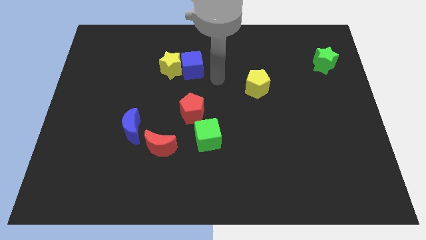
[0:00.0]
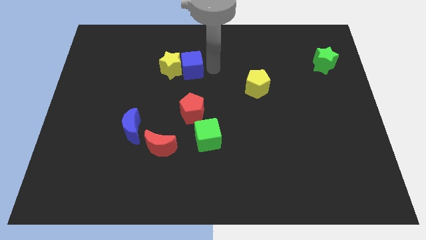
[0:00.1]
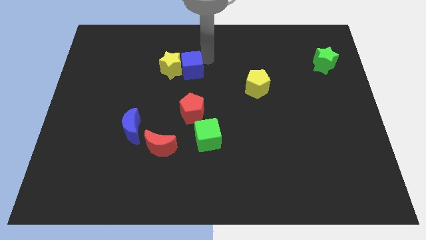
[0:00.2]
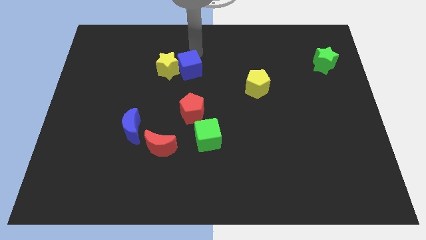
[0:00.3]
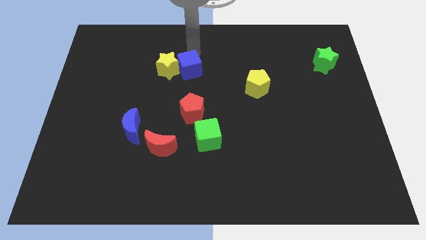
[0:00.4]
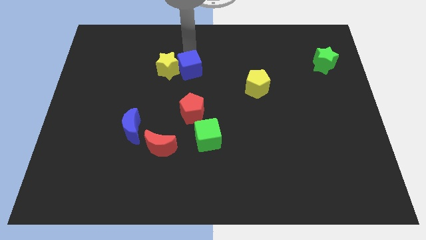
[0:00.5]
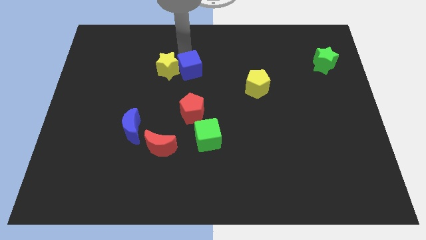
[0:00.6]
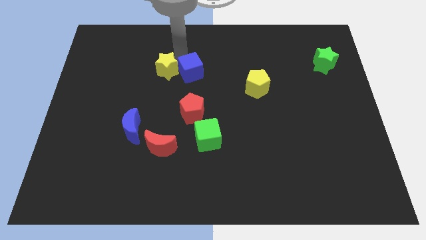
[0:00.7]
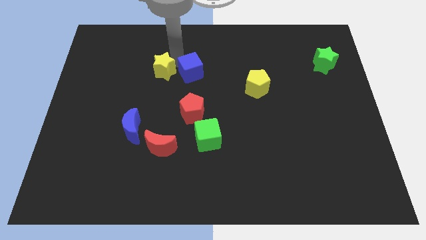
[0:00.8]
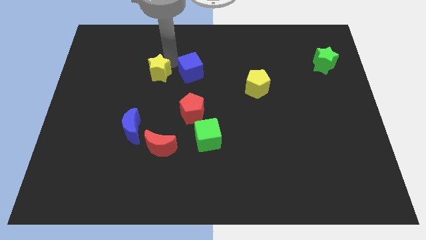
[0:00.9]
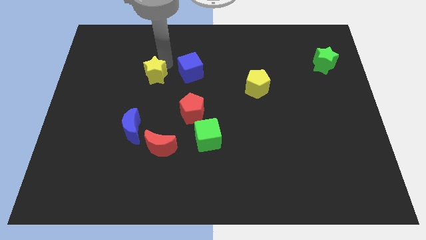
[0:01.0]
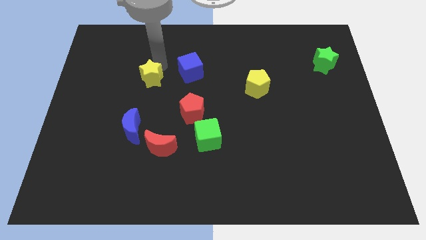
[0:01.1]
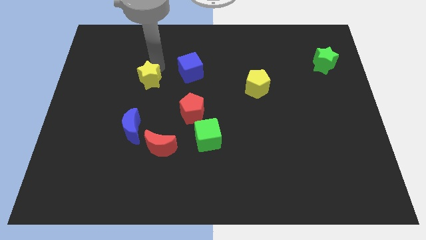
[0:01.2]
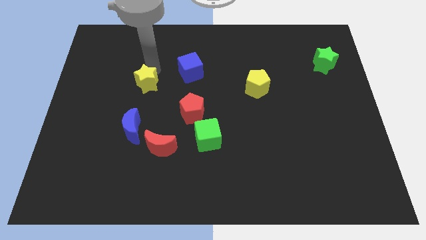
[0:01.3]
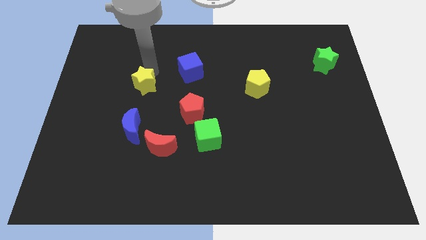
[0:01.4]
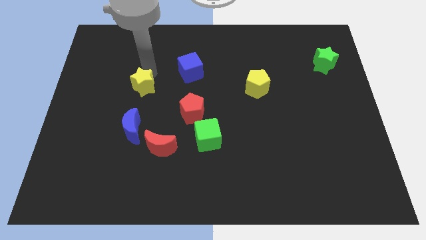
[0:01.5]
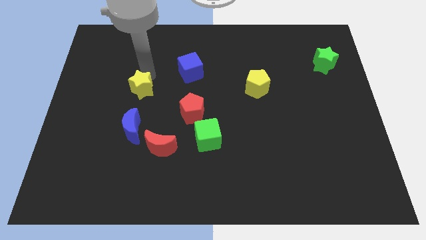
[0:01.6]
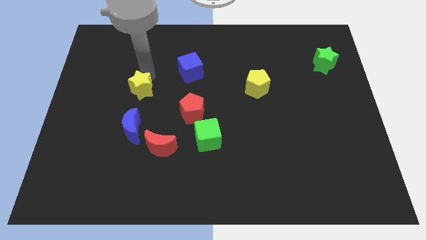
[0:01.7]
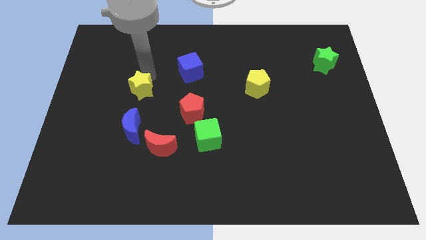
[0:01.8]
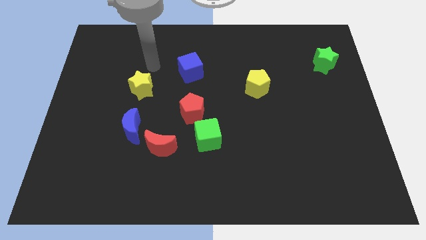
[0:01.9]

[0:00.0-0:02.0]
place the yellow star to the top side of the blue moon

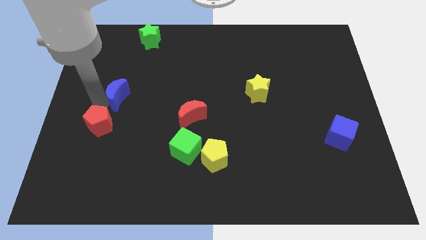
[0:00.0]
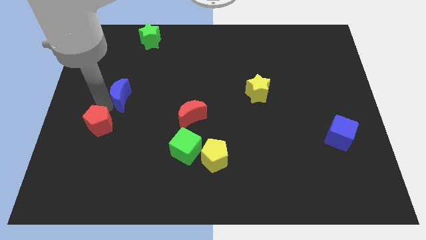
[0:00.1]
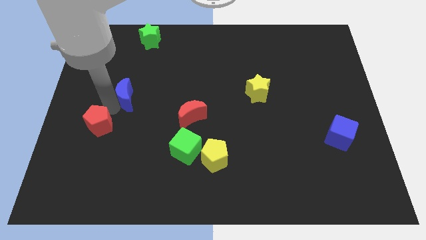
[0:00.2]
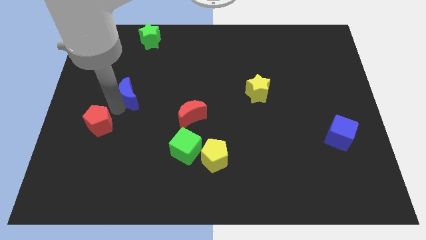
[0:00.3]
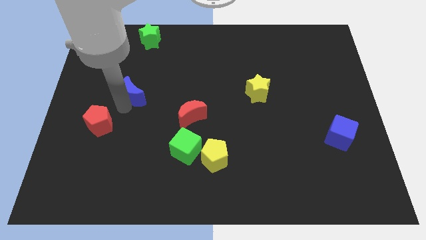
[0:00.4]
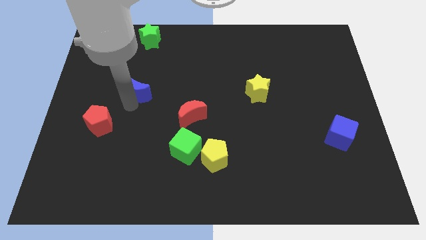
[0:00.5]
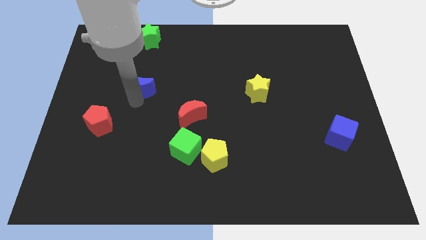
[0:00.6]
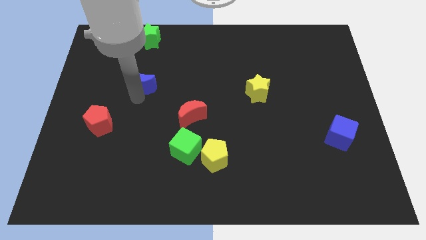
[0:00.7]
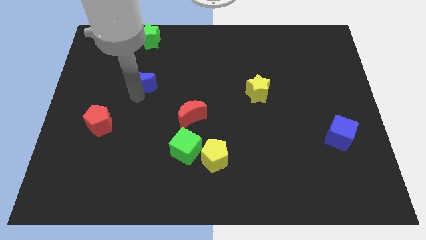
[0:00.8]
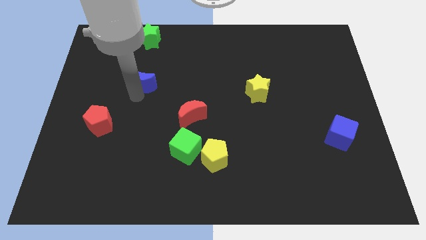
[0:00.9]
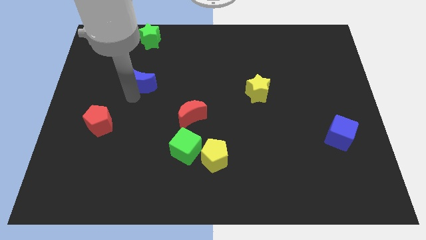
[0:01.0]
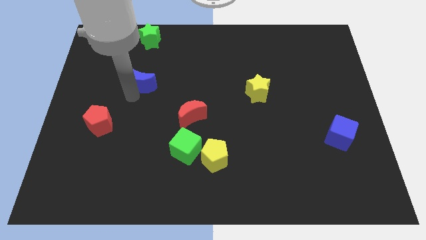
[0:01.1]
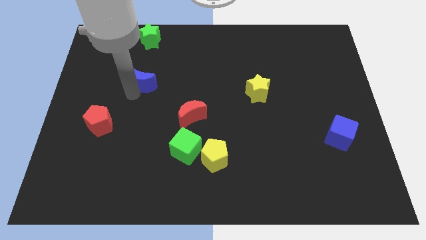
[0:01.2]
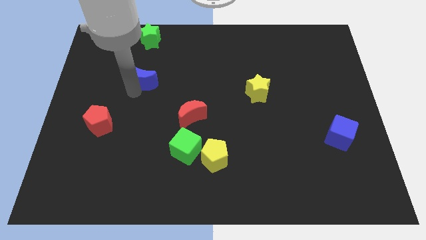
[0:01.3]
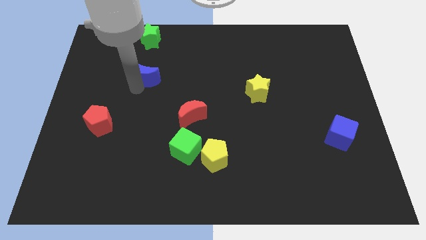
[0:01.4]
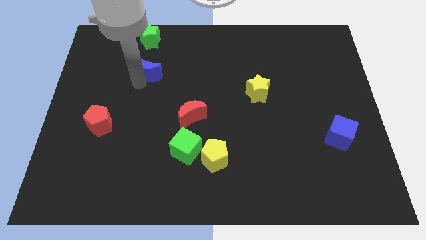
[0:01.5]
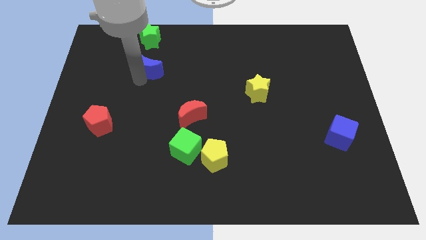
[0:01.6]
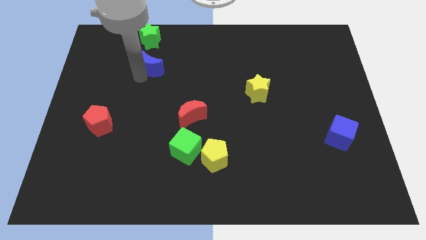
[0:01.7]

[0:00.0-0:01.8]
push the blue crescent below to the green star

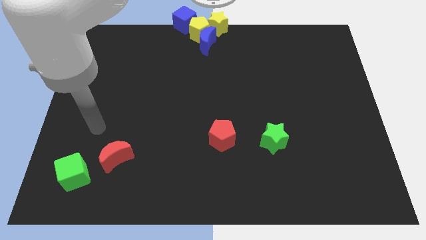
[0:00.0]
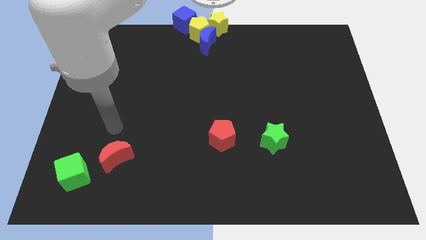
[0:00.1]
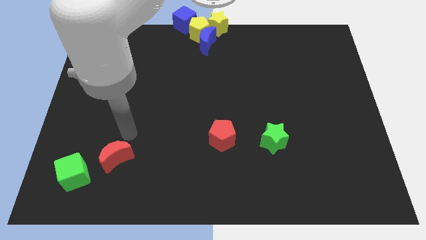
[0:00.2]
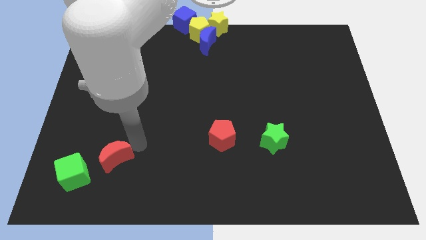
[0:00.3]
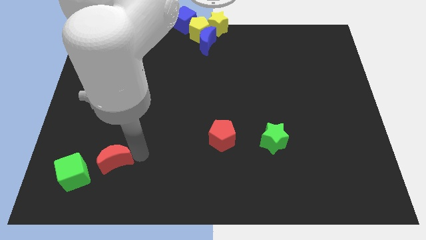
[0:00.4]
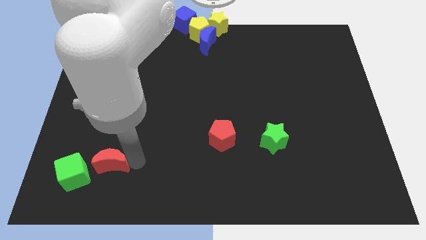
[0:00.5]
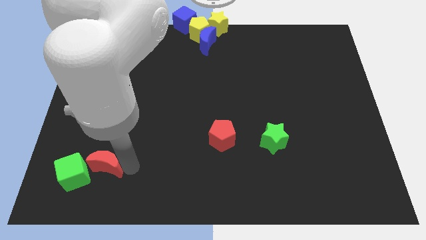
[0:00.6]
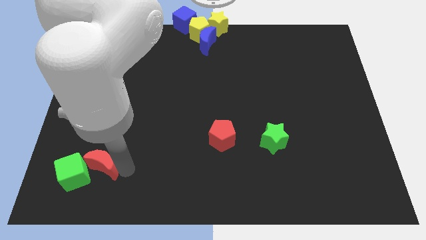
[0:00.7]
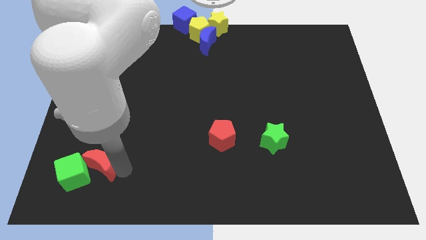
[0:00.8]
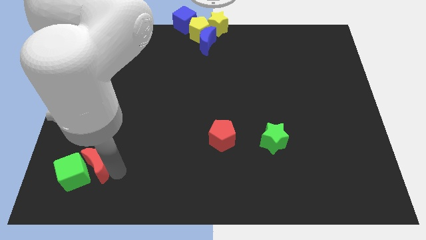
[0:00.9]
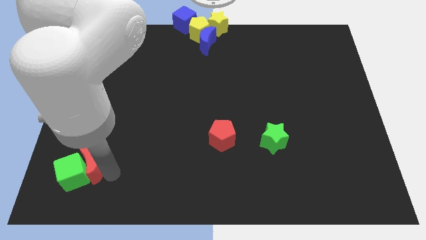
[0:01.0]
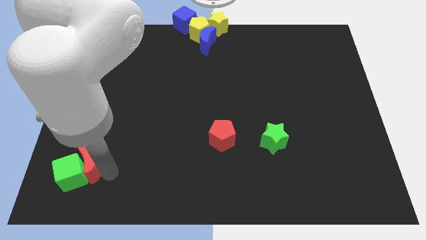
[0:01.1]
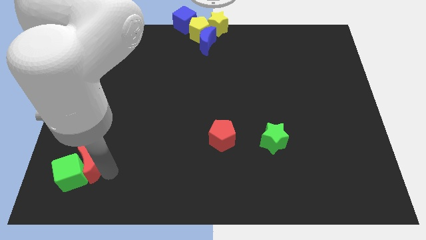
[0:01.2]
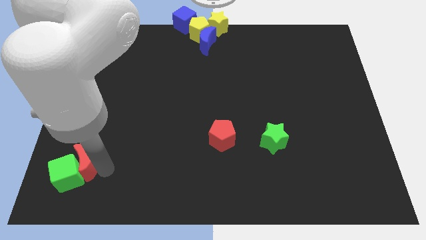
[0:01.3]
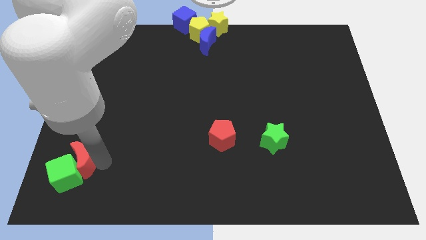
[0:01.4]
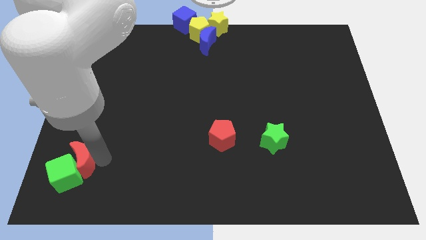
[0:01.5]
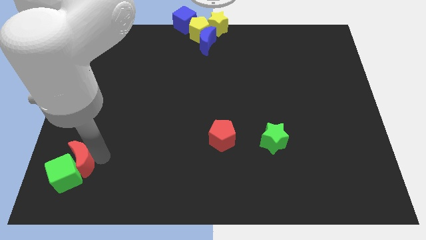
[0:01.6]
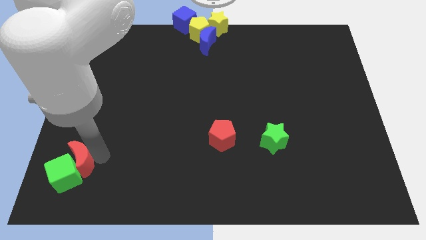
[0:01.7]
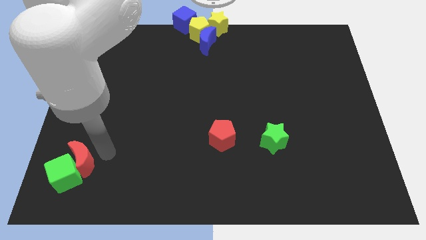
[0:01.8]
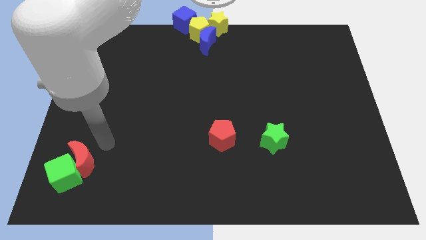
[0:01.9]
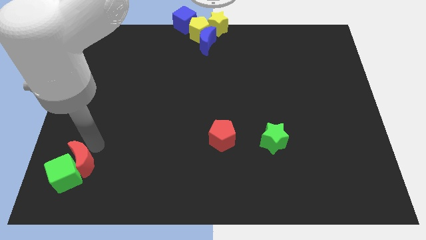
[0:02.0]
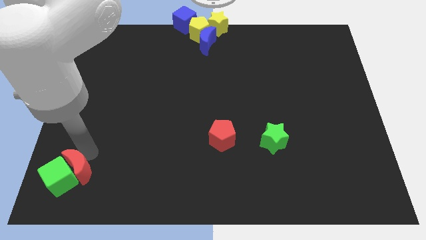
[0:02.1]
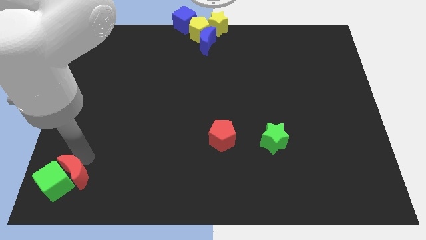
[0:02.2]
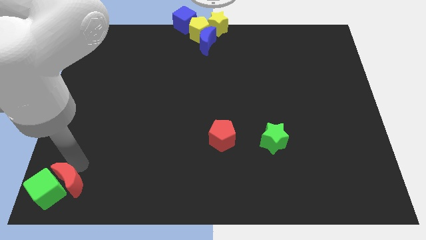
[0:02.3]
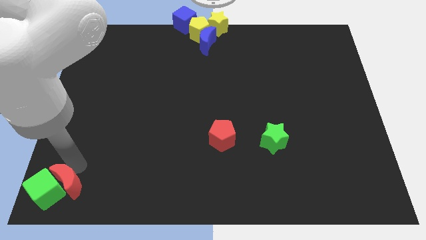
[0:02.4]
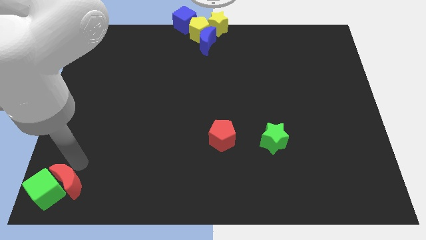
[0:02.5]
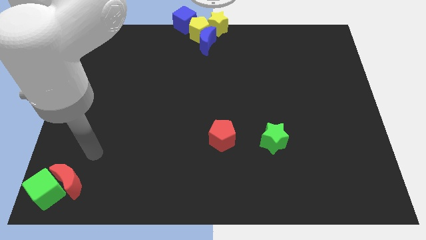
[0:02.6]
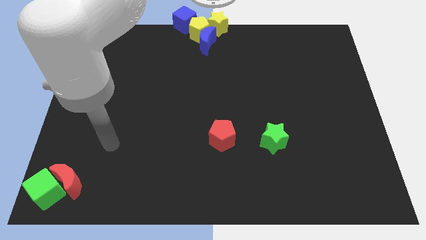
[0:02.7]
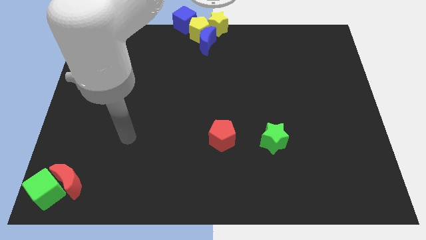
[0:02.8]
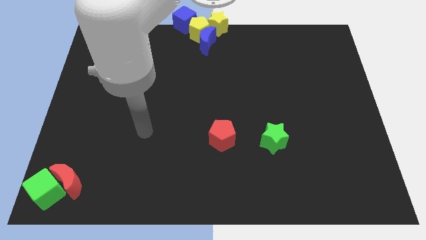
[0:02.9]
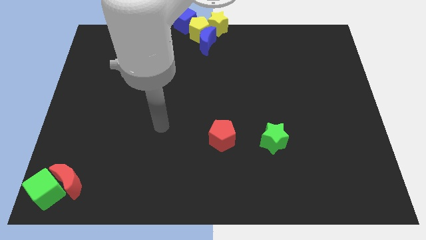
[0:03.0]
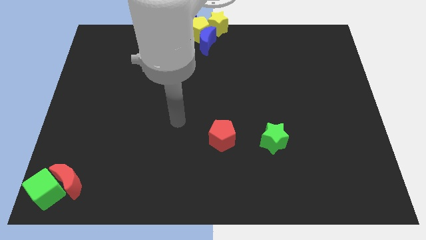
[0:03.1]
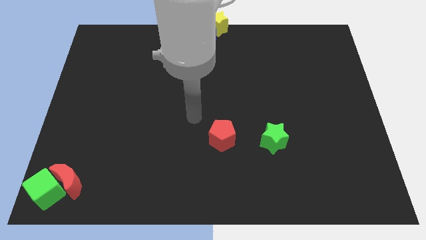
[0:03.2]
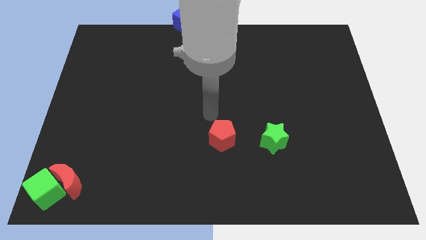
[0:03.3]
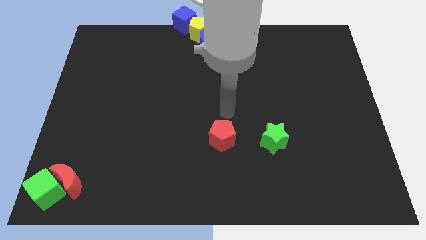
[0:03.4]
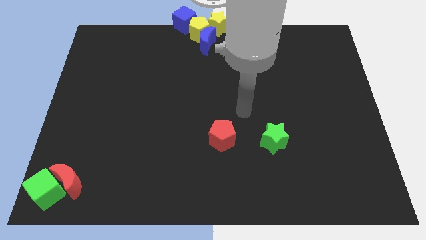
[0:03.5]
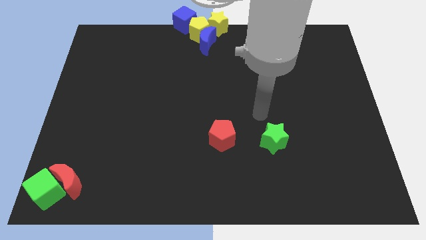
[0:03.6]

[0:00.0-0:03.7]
push red crescent along with the green cube to the left bottom corner of the board

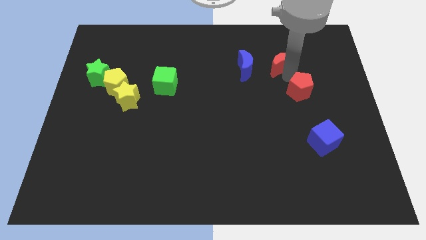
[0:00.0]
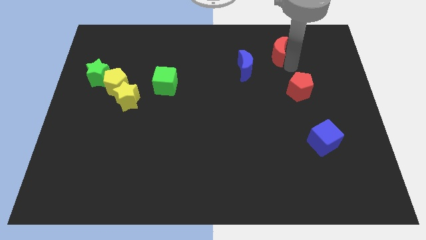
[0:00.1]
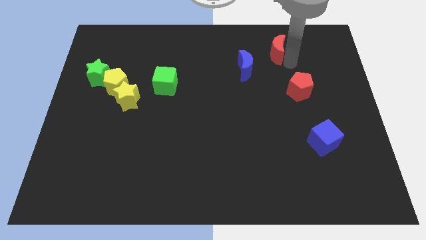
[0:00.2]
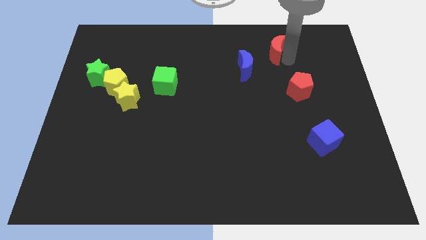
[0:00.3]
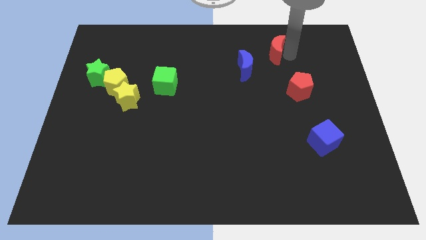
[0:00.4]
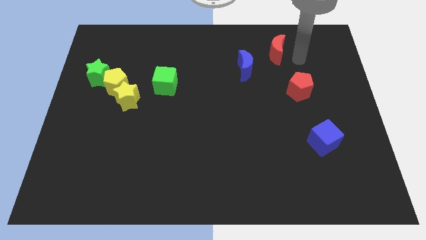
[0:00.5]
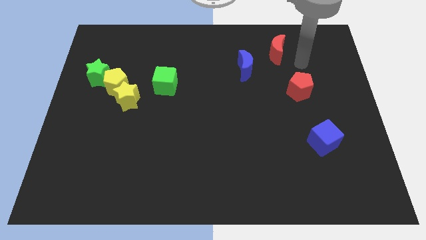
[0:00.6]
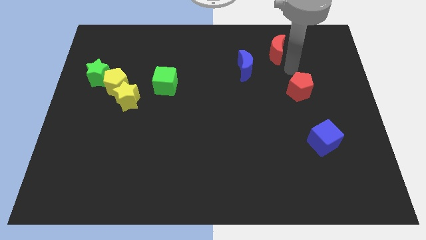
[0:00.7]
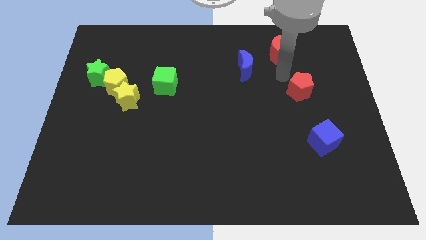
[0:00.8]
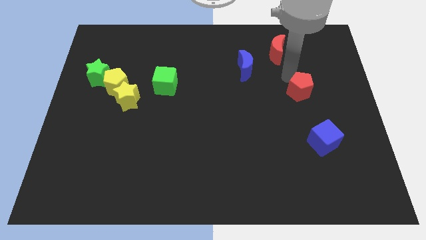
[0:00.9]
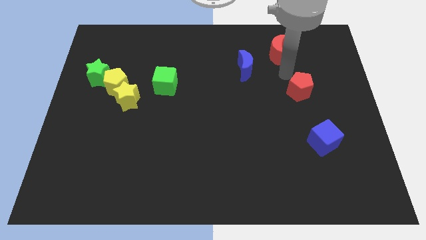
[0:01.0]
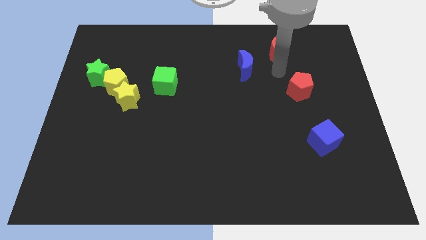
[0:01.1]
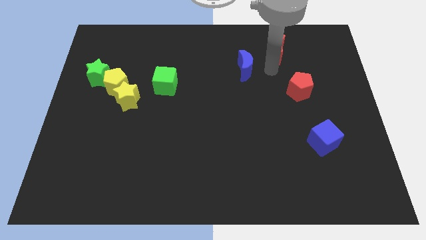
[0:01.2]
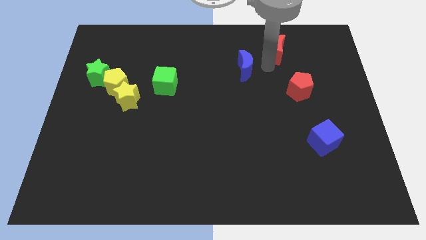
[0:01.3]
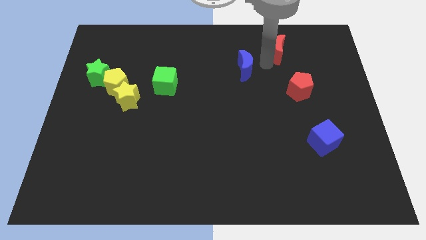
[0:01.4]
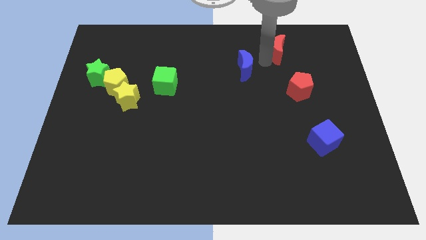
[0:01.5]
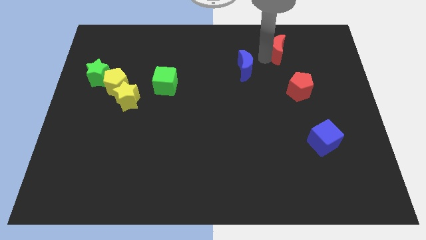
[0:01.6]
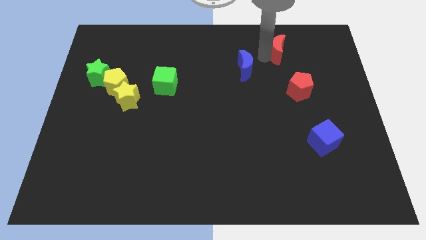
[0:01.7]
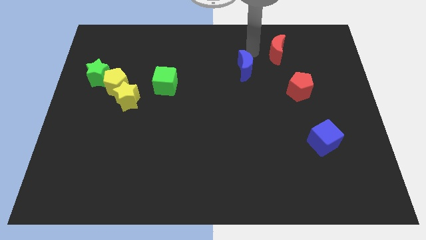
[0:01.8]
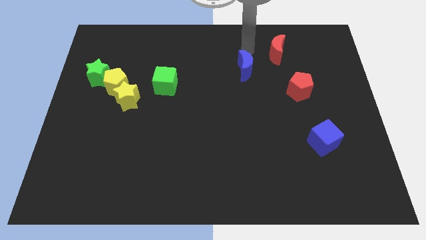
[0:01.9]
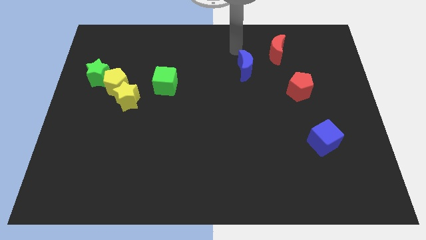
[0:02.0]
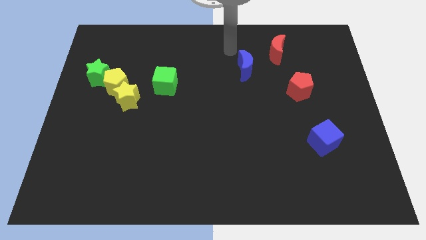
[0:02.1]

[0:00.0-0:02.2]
push the red crescent to the right side of the blue crescent
